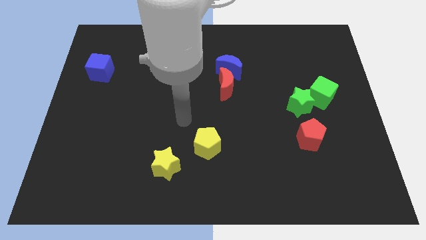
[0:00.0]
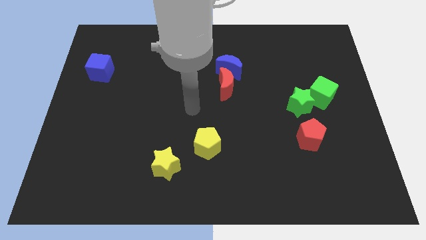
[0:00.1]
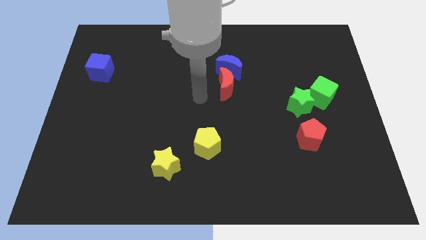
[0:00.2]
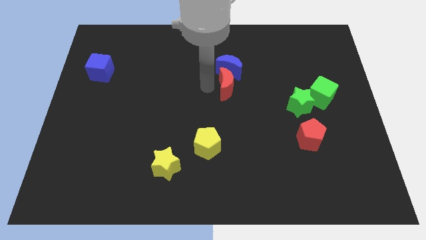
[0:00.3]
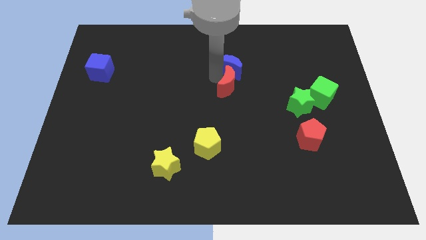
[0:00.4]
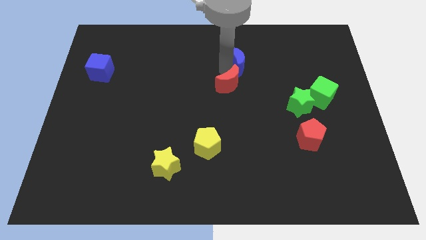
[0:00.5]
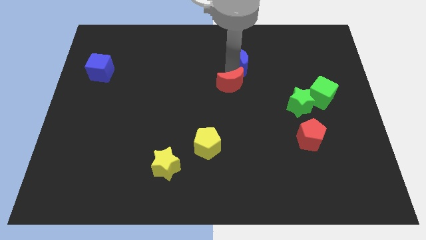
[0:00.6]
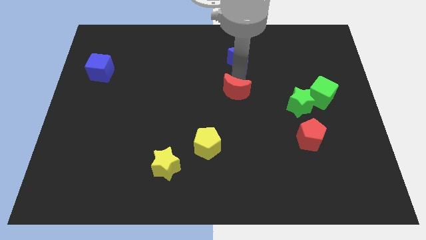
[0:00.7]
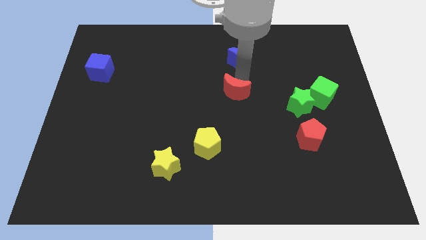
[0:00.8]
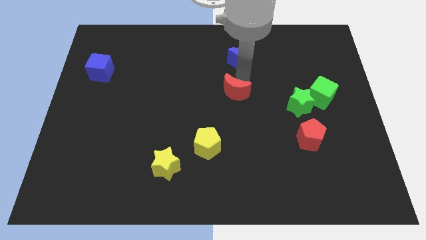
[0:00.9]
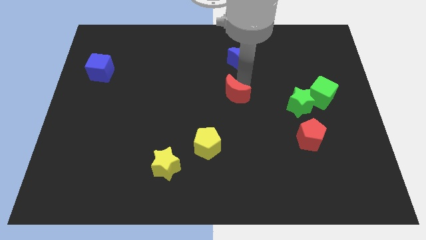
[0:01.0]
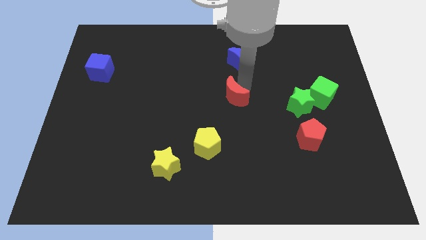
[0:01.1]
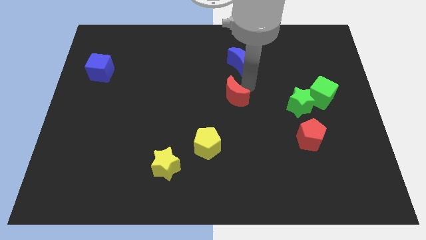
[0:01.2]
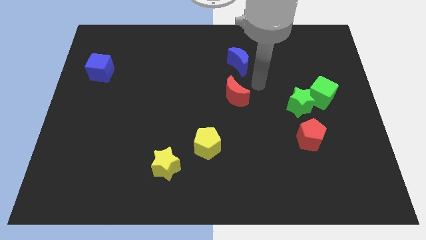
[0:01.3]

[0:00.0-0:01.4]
separate the red moon from the blue moon

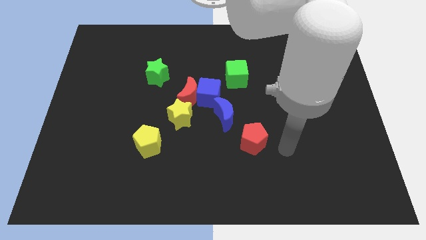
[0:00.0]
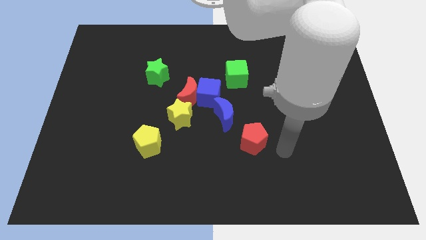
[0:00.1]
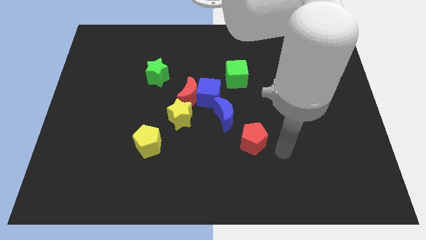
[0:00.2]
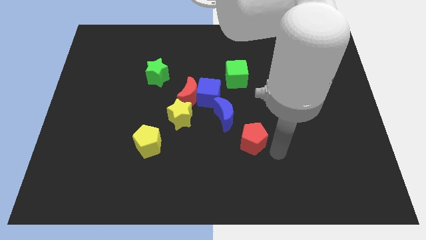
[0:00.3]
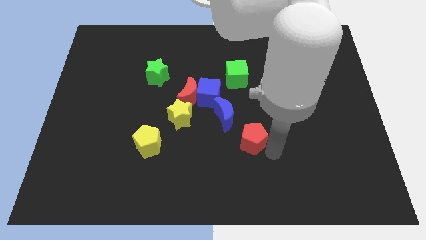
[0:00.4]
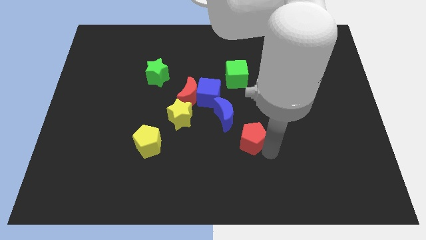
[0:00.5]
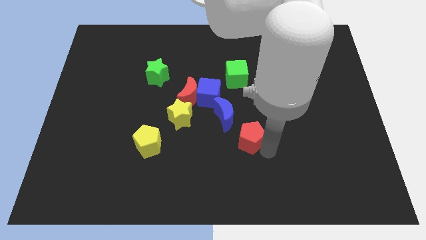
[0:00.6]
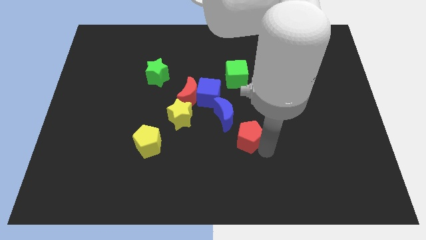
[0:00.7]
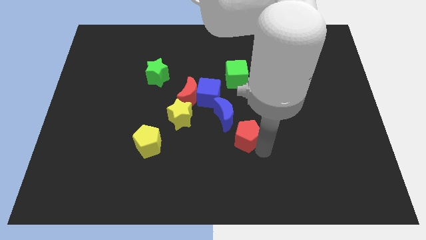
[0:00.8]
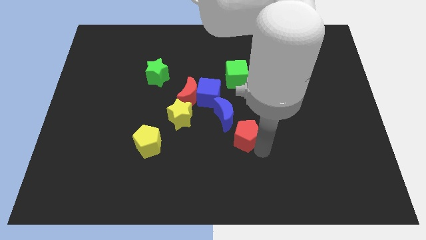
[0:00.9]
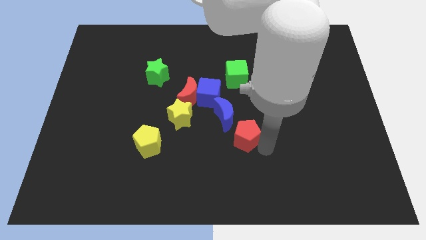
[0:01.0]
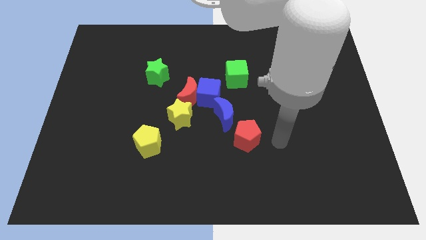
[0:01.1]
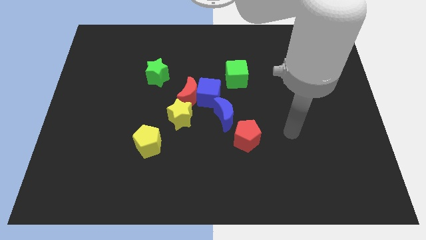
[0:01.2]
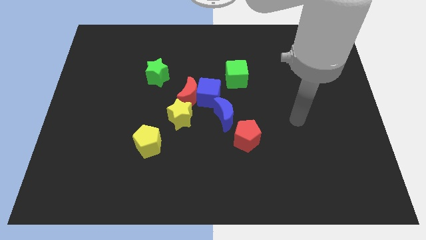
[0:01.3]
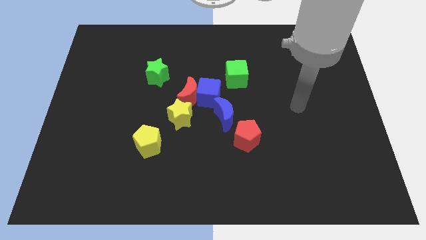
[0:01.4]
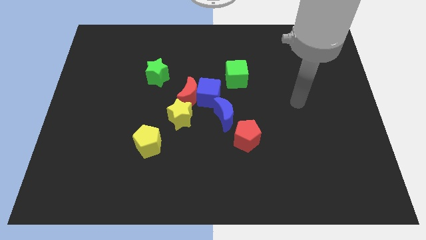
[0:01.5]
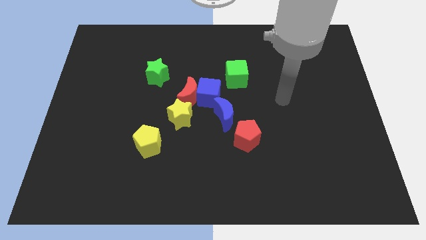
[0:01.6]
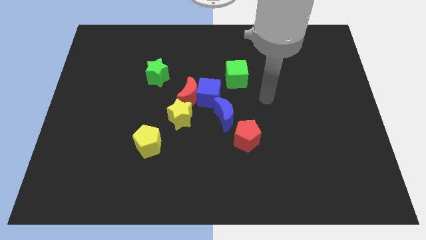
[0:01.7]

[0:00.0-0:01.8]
move the red pentagon slightly diagonal up

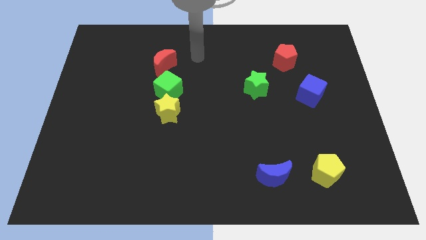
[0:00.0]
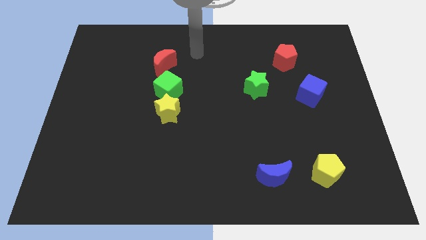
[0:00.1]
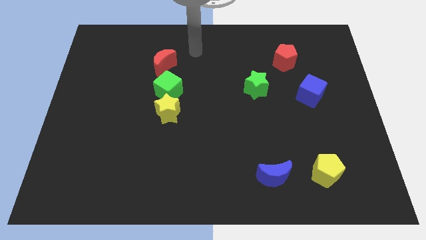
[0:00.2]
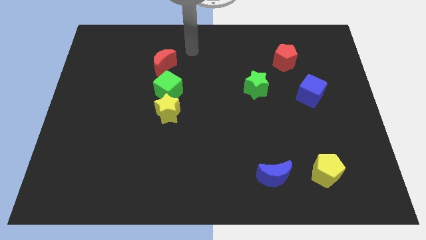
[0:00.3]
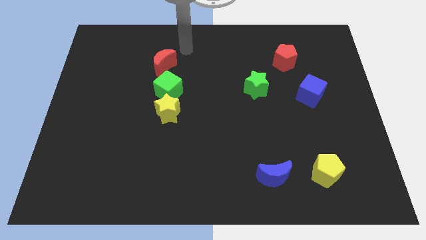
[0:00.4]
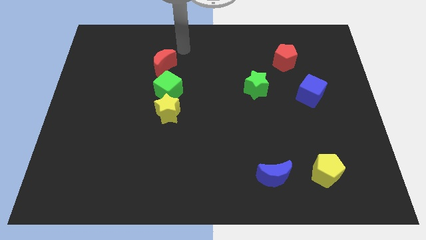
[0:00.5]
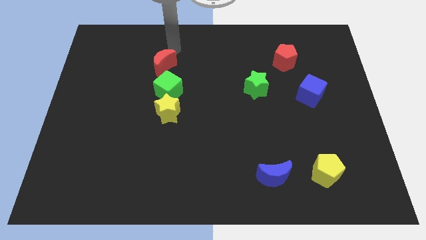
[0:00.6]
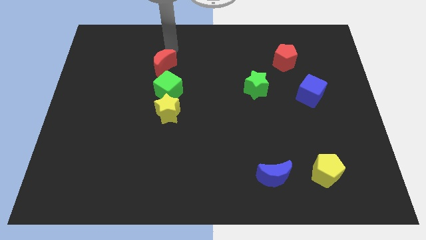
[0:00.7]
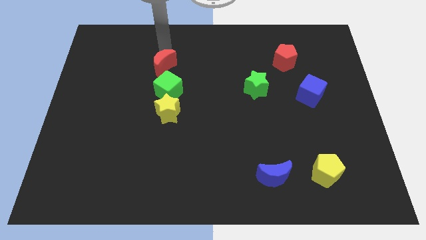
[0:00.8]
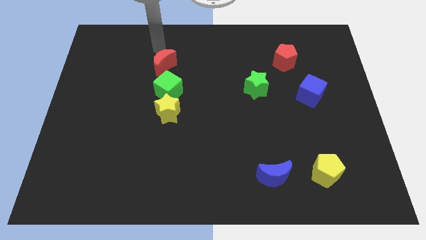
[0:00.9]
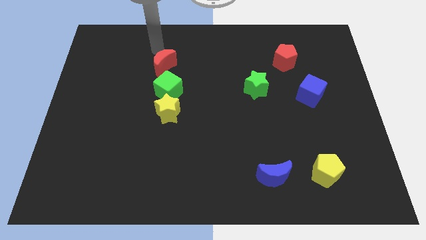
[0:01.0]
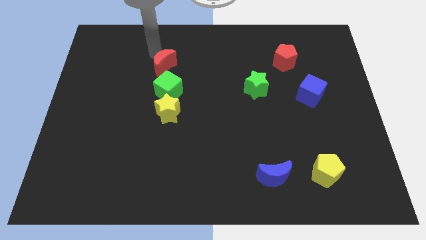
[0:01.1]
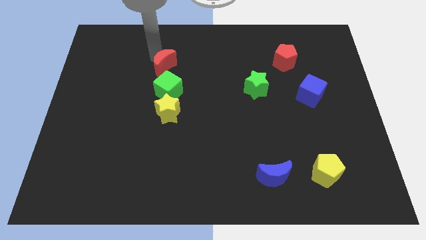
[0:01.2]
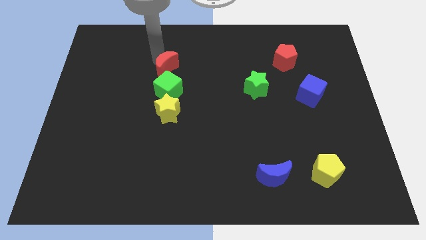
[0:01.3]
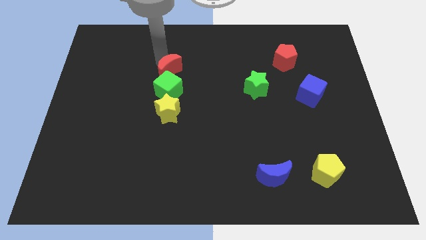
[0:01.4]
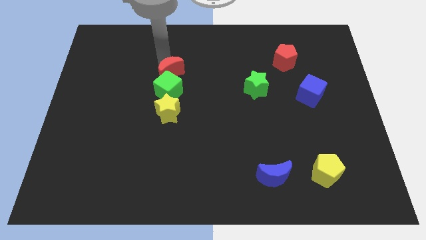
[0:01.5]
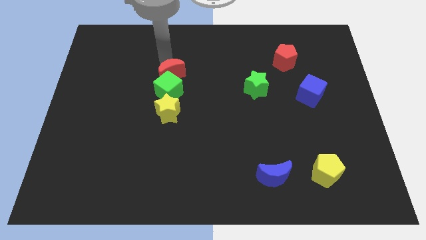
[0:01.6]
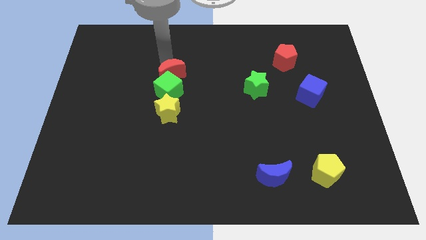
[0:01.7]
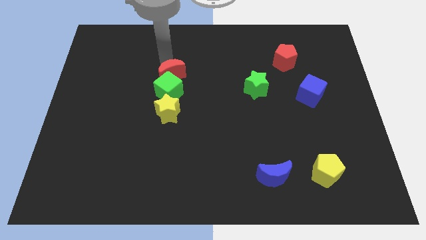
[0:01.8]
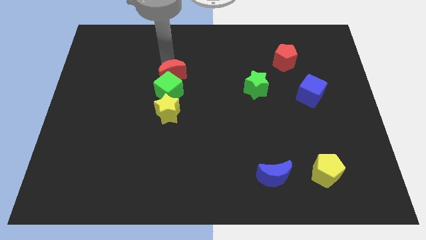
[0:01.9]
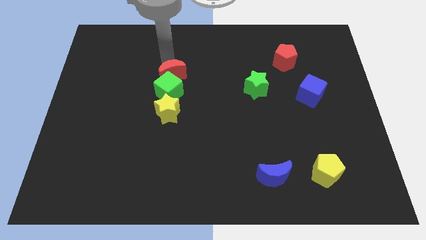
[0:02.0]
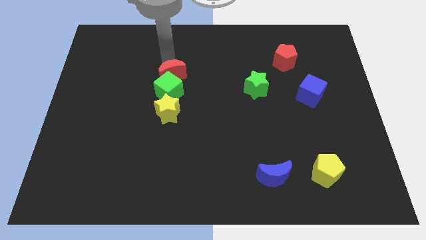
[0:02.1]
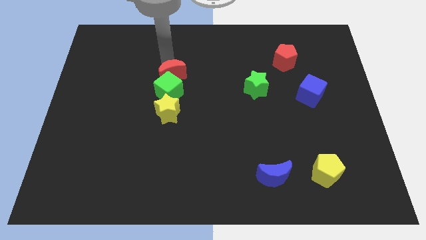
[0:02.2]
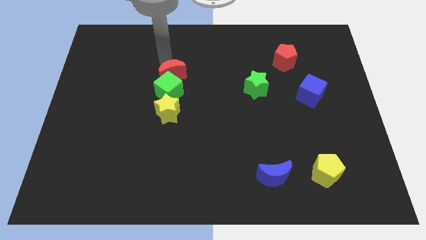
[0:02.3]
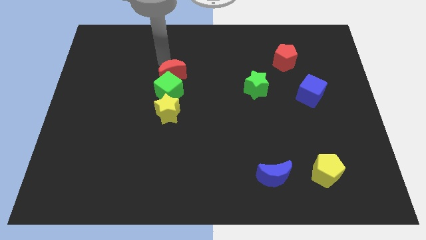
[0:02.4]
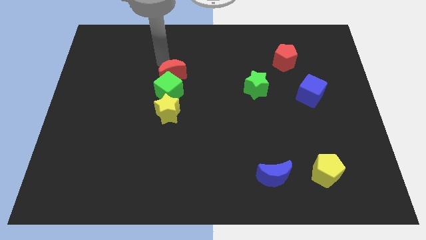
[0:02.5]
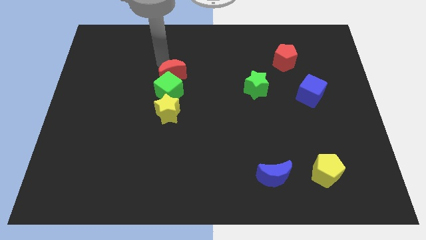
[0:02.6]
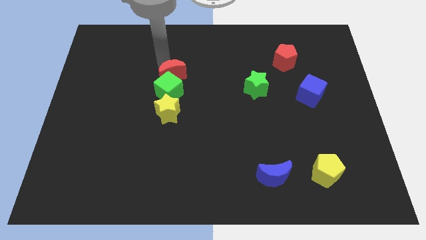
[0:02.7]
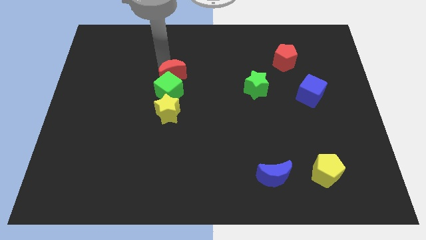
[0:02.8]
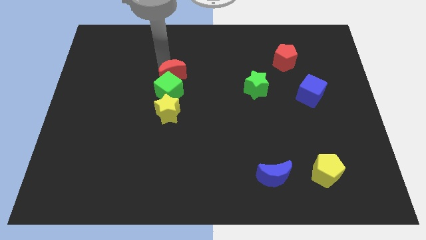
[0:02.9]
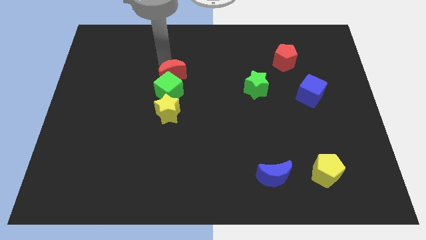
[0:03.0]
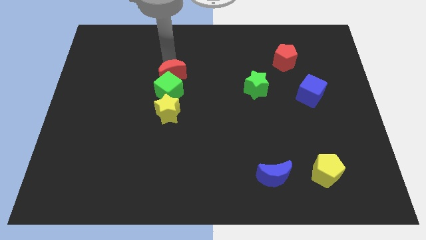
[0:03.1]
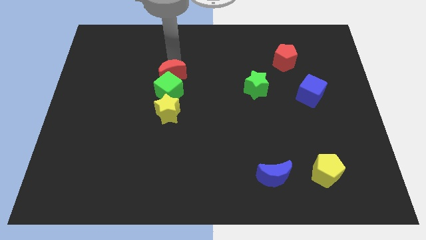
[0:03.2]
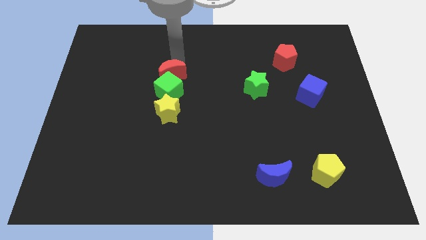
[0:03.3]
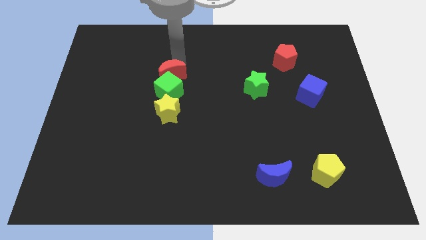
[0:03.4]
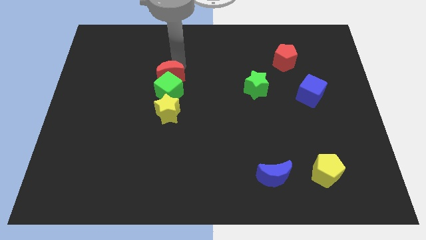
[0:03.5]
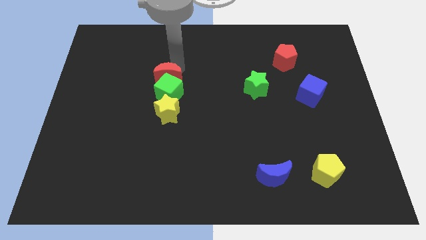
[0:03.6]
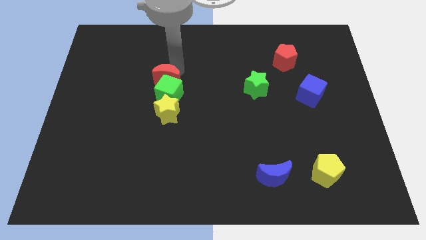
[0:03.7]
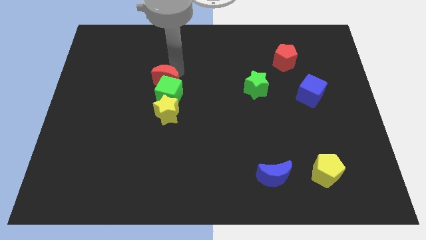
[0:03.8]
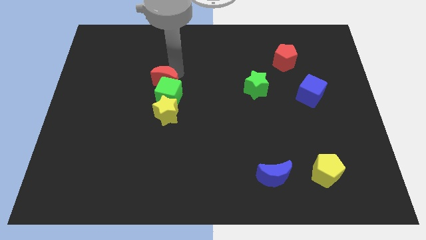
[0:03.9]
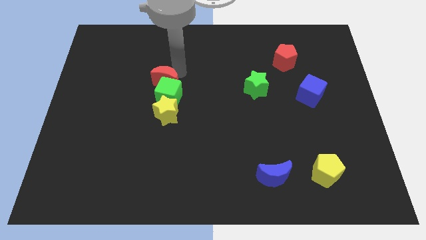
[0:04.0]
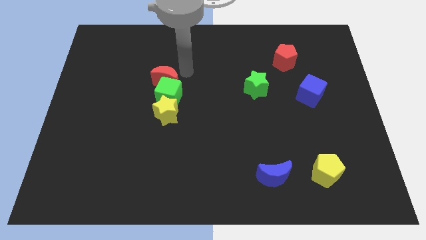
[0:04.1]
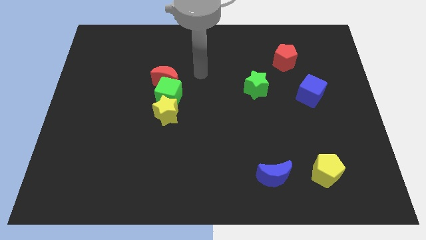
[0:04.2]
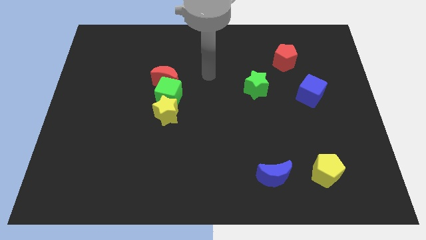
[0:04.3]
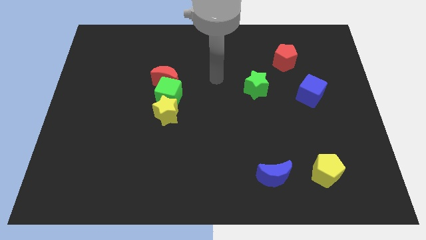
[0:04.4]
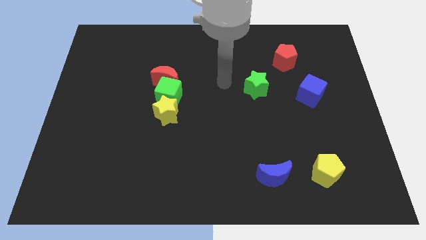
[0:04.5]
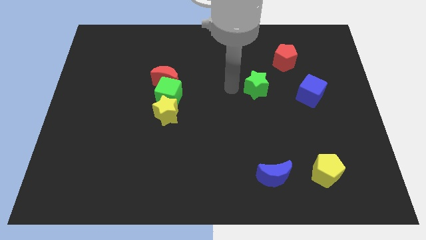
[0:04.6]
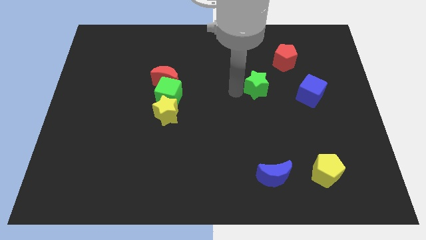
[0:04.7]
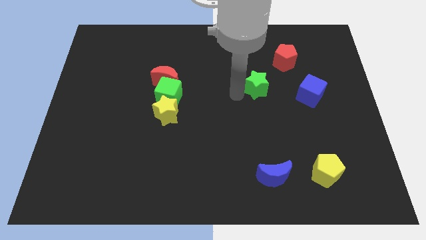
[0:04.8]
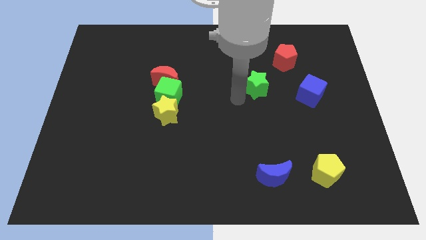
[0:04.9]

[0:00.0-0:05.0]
place the red crescent into the green cube

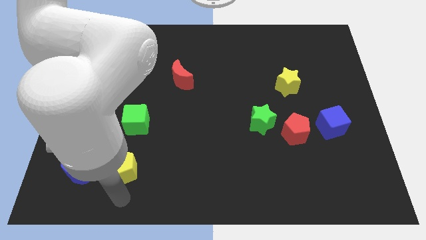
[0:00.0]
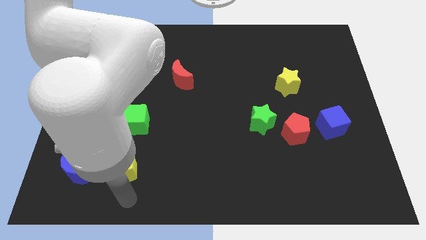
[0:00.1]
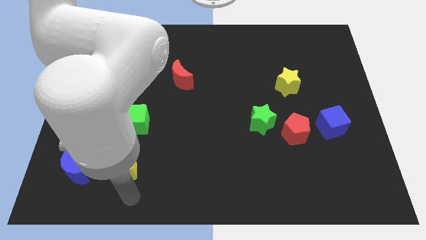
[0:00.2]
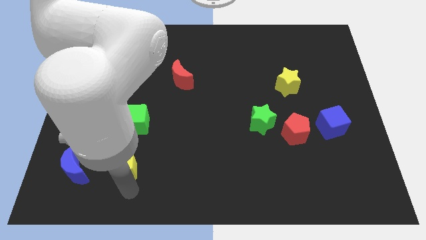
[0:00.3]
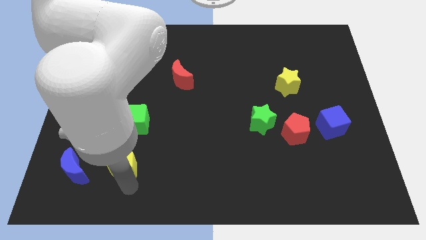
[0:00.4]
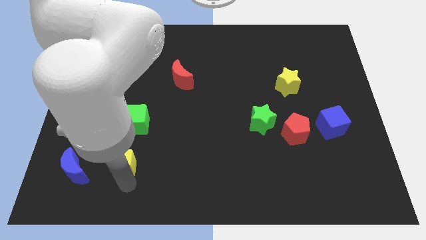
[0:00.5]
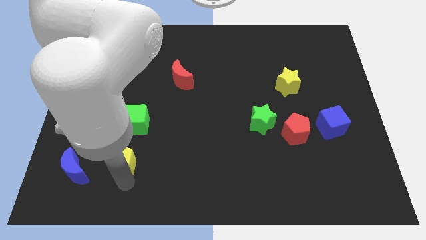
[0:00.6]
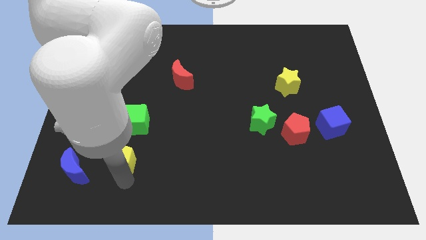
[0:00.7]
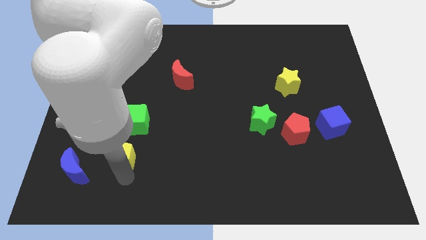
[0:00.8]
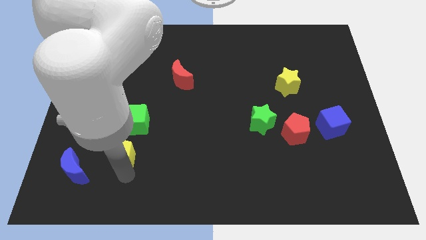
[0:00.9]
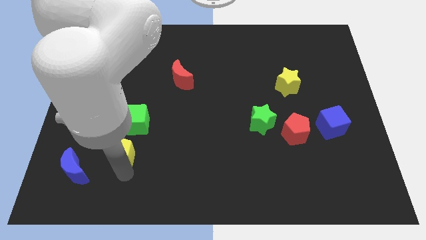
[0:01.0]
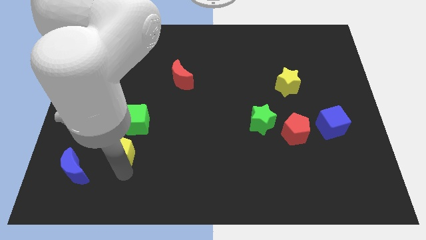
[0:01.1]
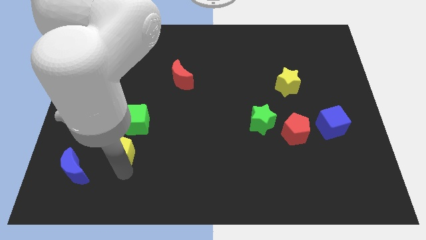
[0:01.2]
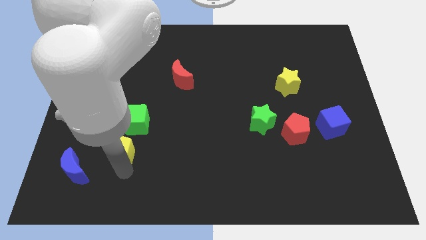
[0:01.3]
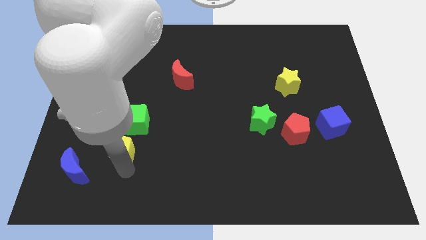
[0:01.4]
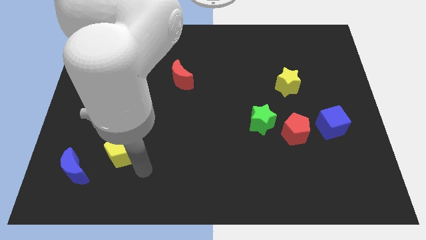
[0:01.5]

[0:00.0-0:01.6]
place the yellow pentagon below the green cube
